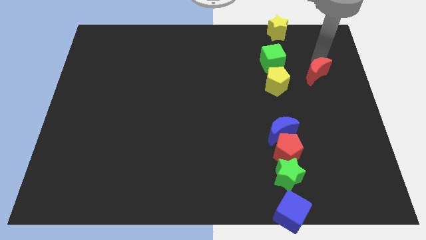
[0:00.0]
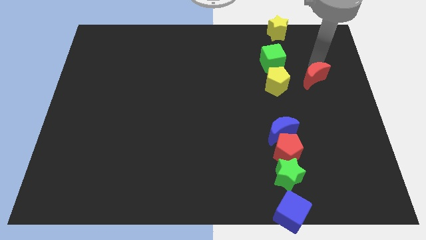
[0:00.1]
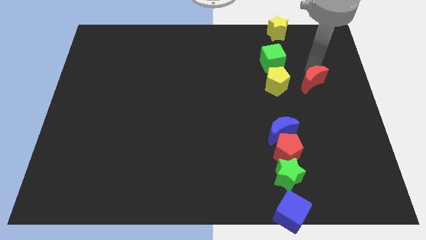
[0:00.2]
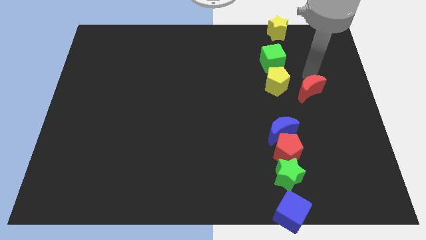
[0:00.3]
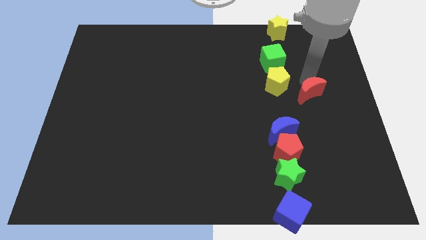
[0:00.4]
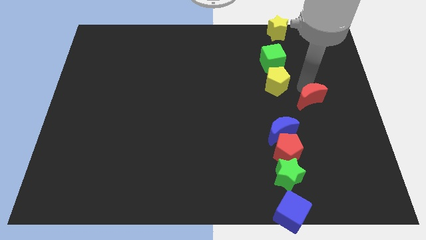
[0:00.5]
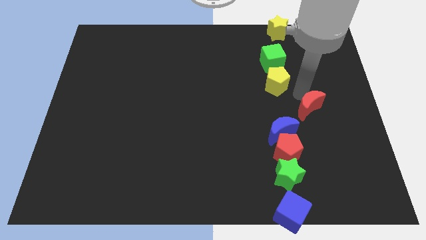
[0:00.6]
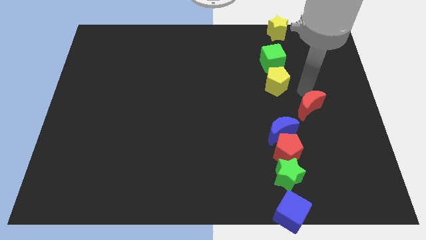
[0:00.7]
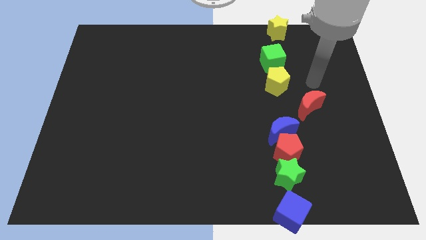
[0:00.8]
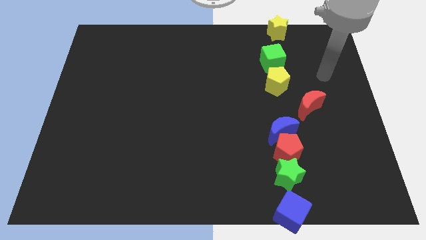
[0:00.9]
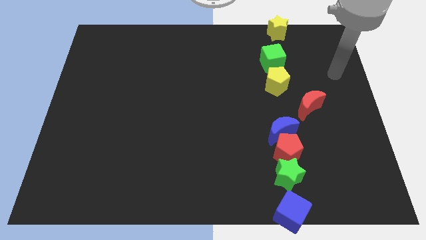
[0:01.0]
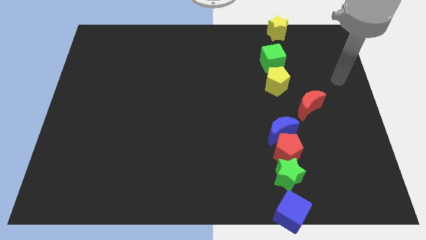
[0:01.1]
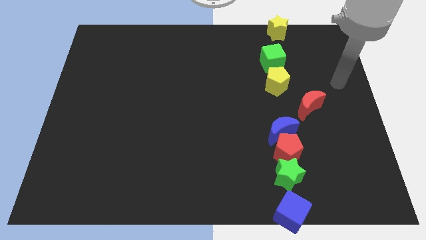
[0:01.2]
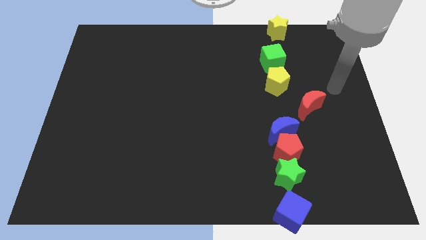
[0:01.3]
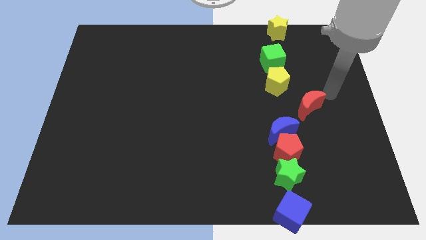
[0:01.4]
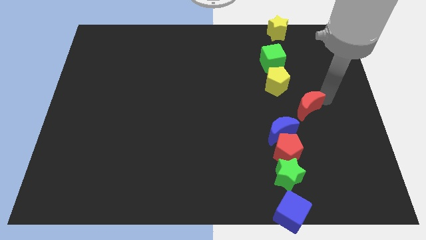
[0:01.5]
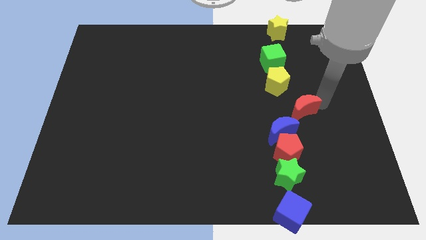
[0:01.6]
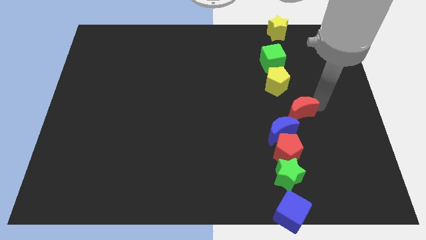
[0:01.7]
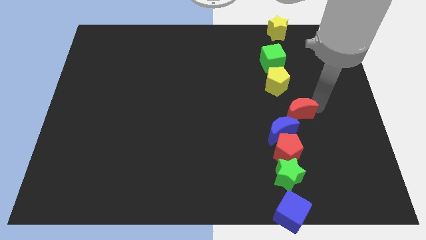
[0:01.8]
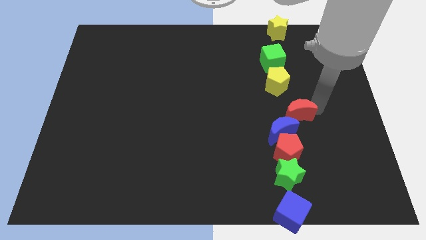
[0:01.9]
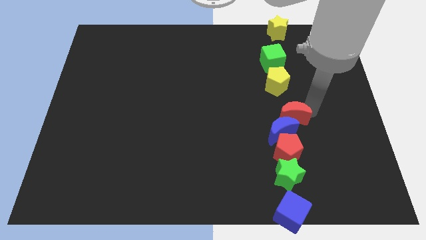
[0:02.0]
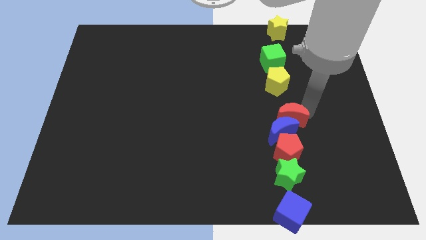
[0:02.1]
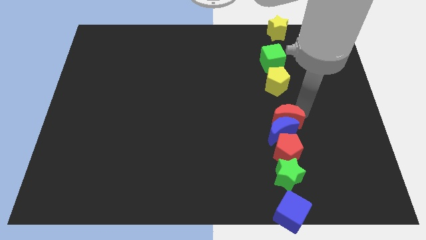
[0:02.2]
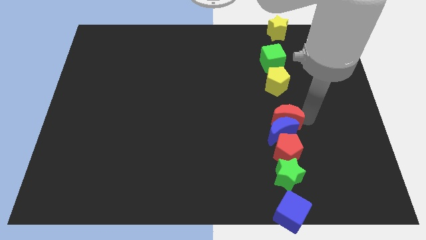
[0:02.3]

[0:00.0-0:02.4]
push the red crescent over the blue crescent

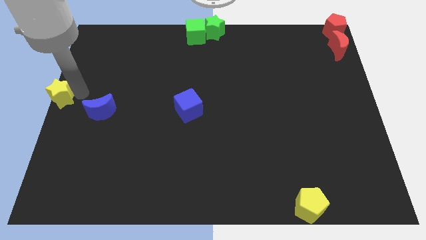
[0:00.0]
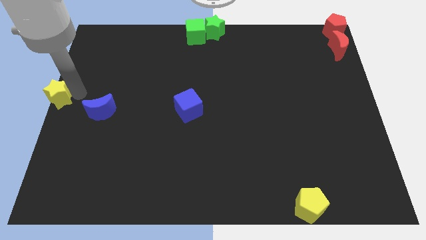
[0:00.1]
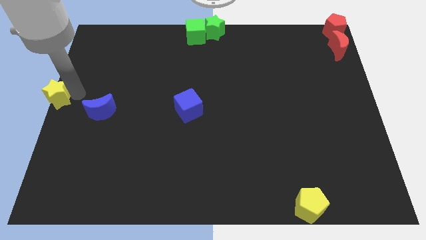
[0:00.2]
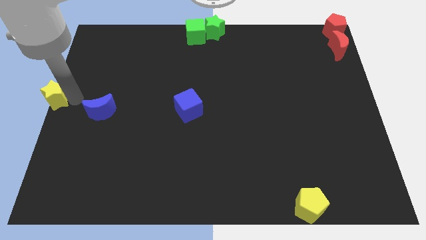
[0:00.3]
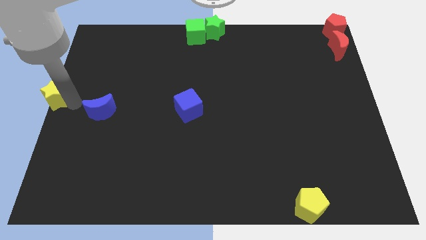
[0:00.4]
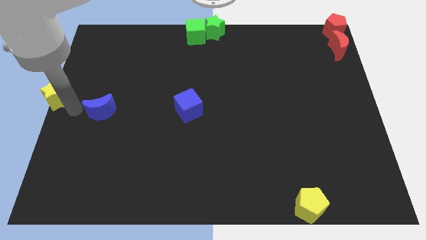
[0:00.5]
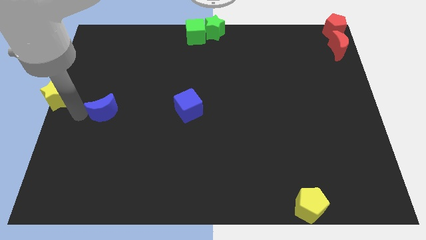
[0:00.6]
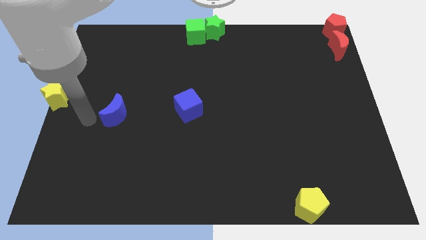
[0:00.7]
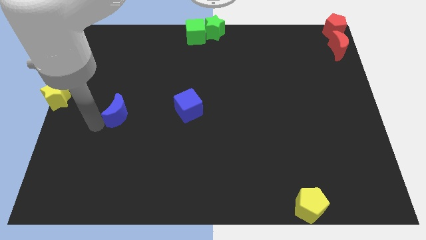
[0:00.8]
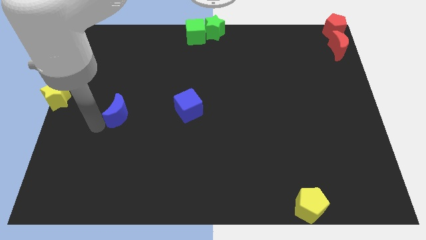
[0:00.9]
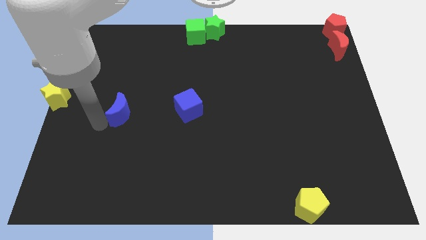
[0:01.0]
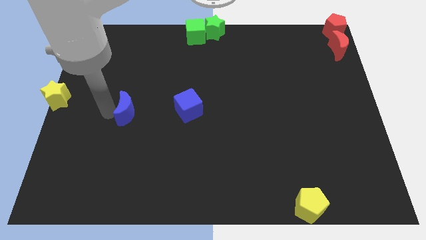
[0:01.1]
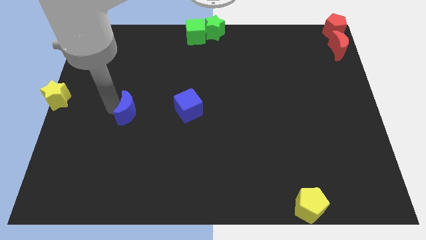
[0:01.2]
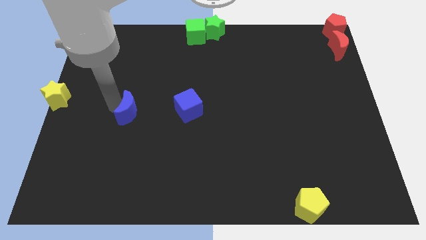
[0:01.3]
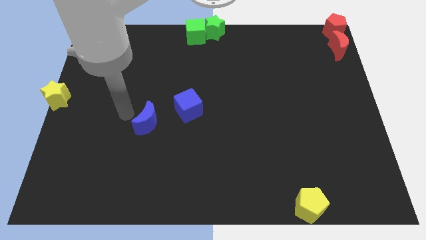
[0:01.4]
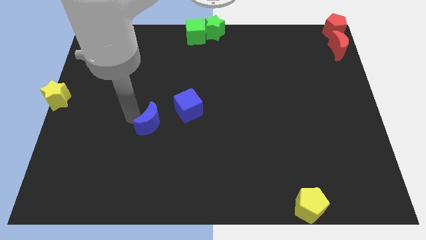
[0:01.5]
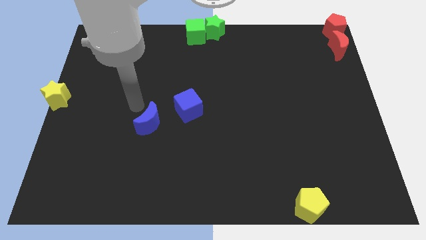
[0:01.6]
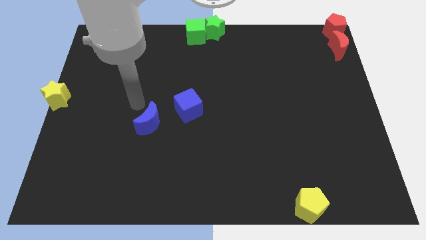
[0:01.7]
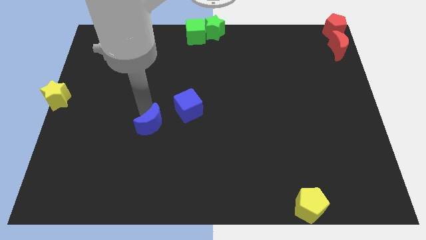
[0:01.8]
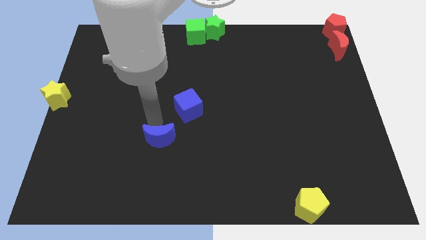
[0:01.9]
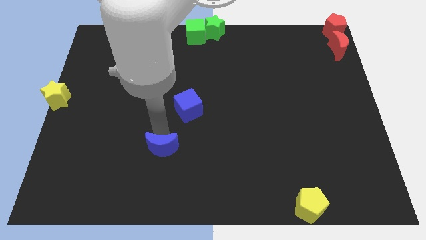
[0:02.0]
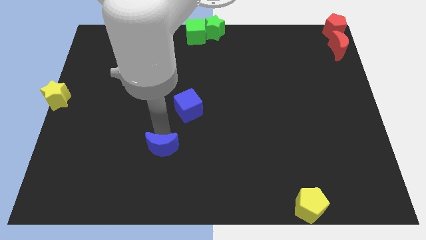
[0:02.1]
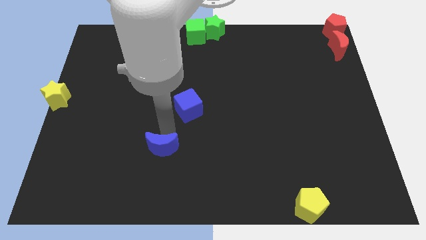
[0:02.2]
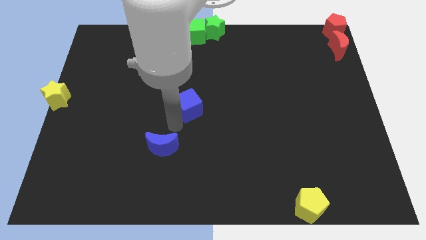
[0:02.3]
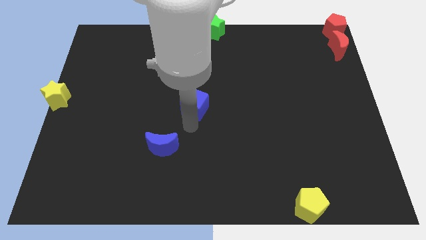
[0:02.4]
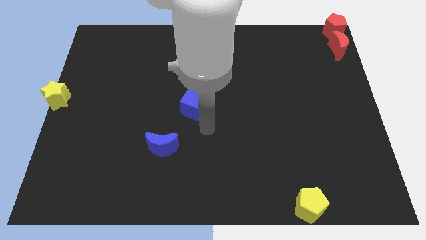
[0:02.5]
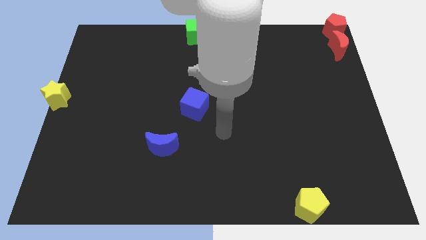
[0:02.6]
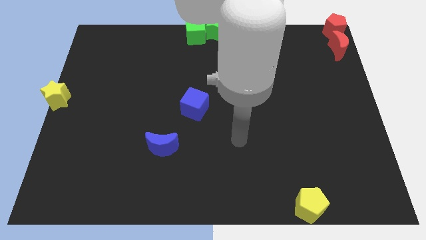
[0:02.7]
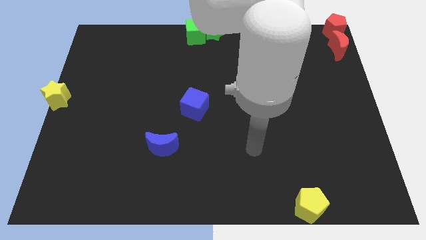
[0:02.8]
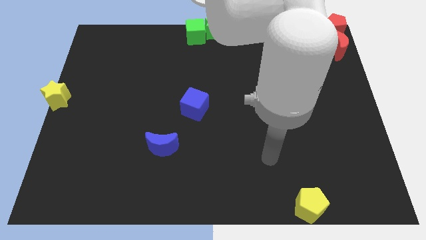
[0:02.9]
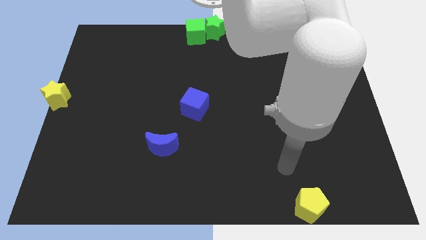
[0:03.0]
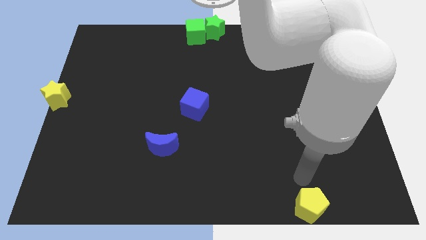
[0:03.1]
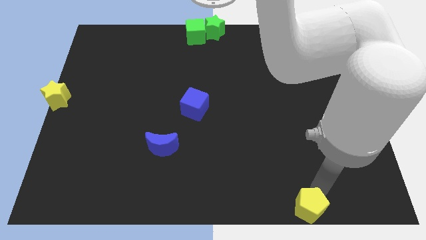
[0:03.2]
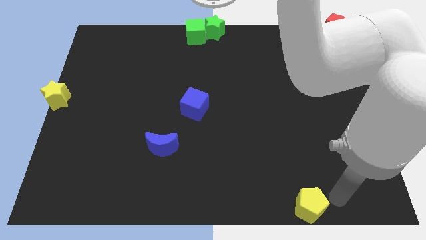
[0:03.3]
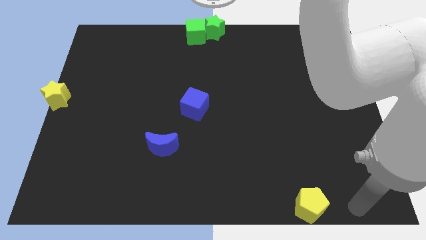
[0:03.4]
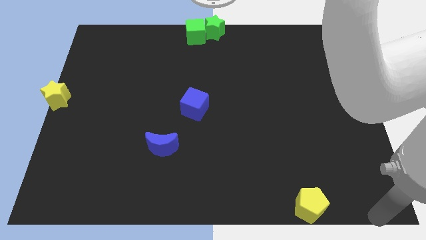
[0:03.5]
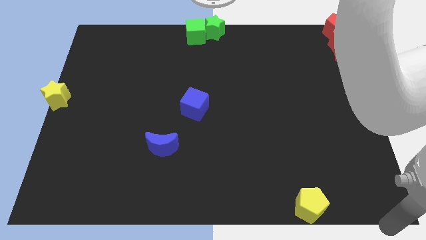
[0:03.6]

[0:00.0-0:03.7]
slightly move the blue crescent towards the bottom center

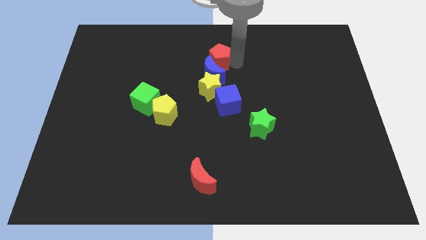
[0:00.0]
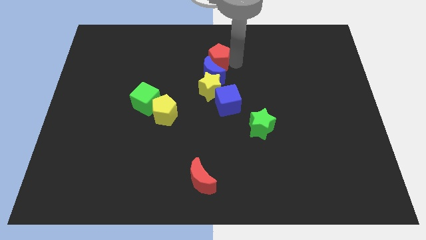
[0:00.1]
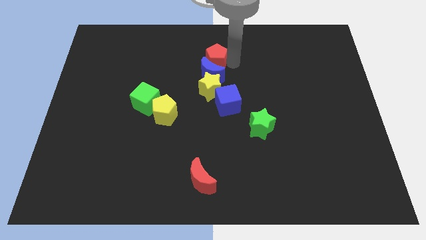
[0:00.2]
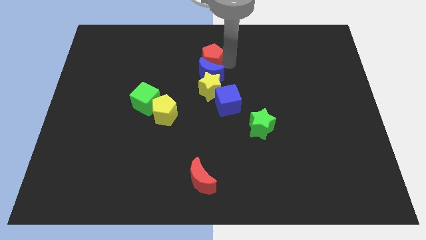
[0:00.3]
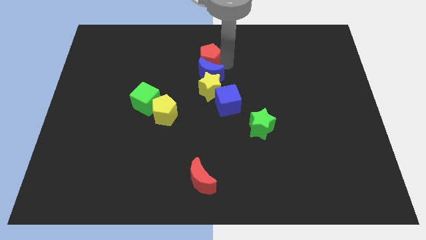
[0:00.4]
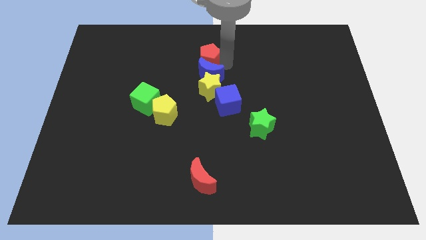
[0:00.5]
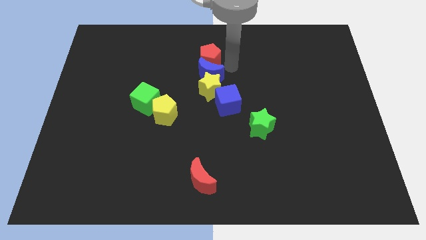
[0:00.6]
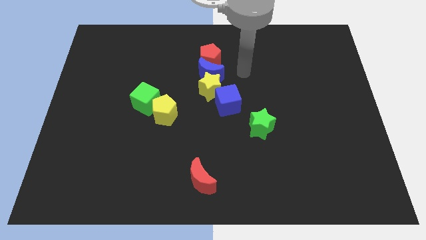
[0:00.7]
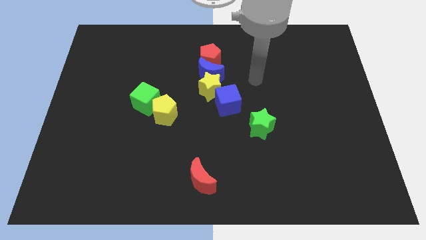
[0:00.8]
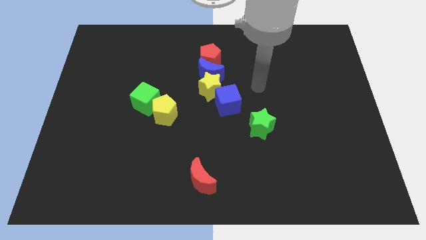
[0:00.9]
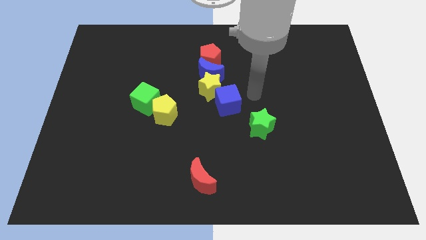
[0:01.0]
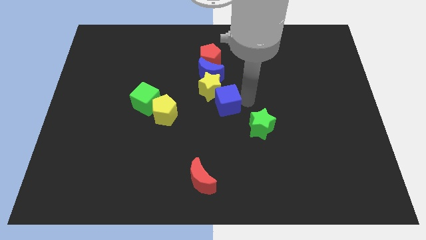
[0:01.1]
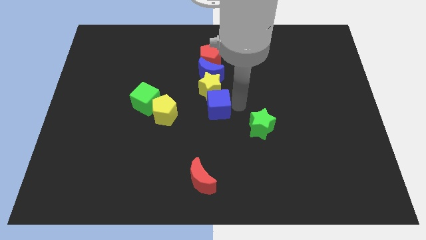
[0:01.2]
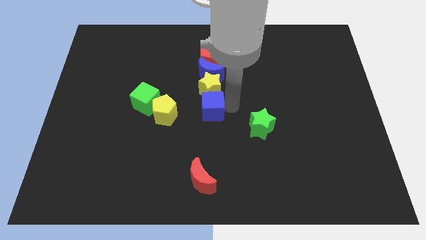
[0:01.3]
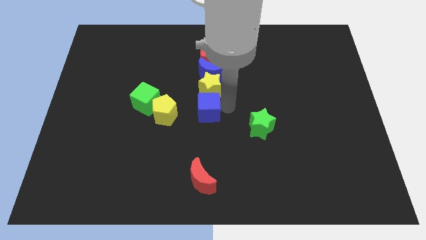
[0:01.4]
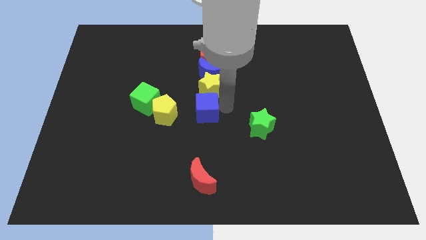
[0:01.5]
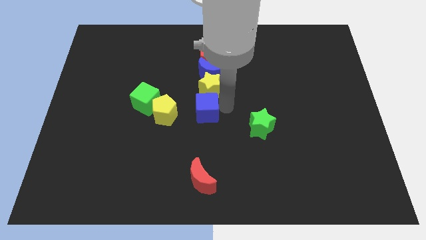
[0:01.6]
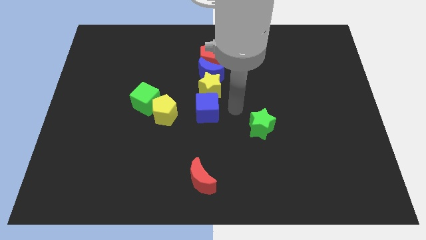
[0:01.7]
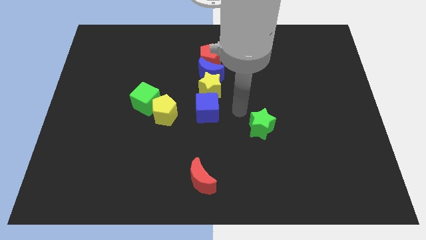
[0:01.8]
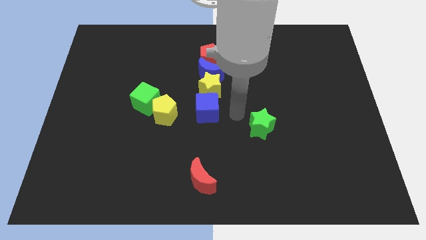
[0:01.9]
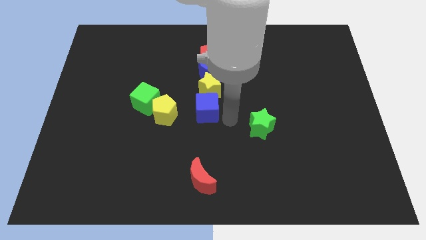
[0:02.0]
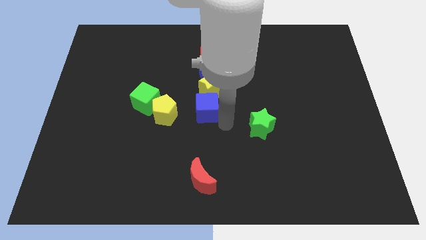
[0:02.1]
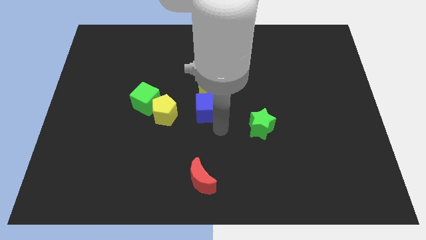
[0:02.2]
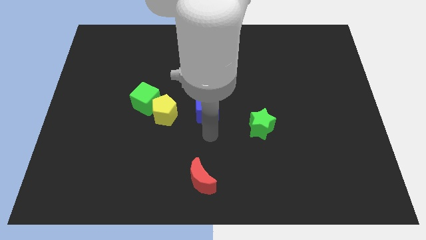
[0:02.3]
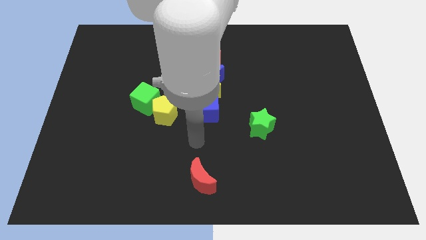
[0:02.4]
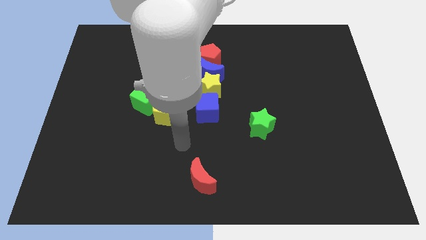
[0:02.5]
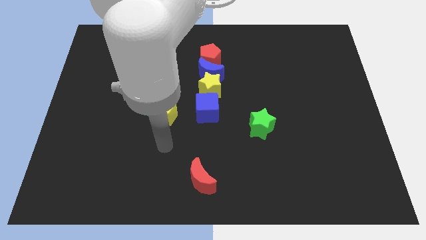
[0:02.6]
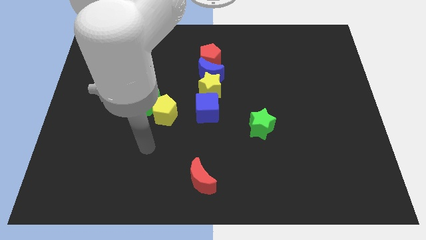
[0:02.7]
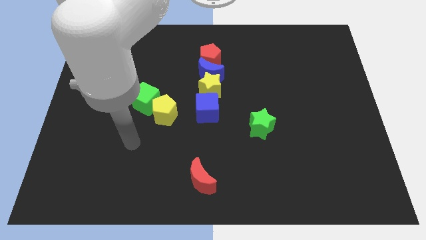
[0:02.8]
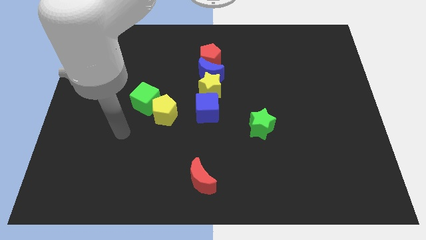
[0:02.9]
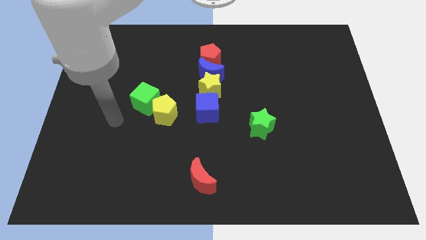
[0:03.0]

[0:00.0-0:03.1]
move your arm towards the green cube
